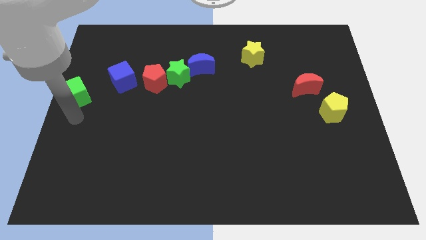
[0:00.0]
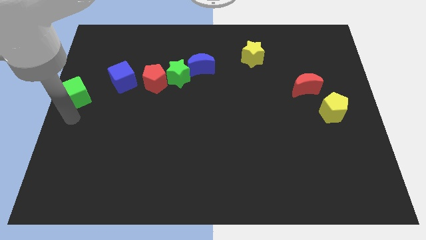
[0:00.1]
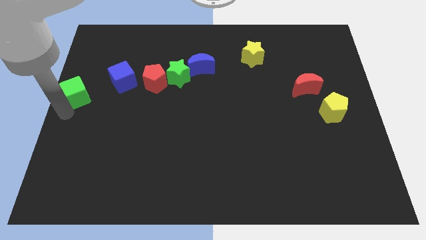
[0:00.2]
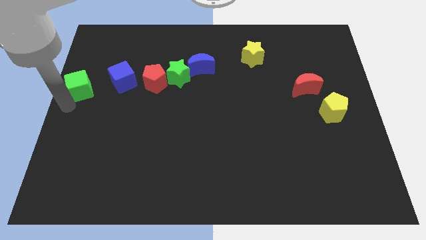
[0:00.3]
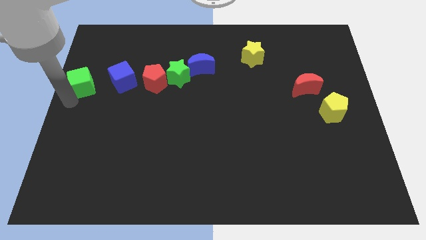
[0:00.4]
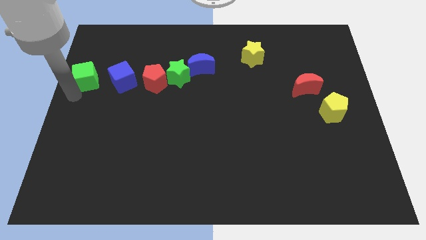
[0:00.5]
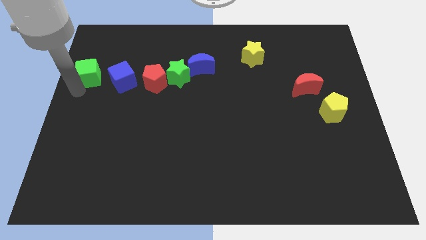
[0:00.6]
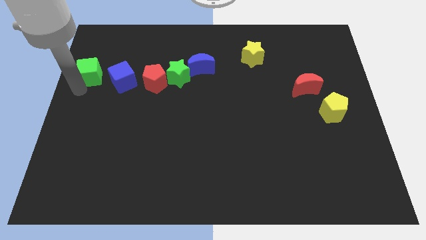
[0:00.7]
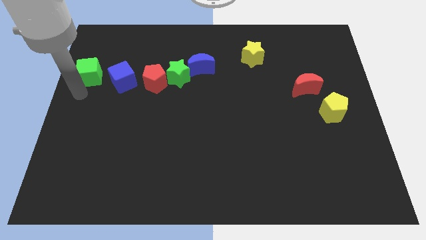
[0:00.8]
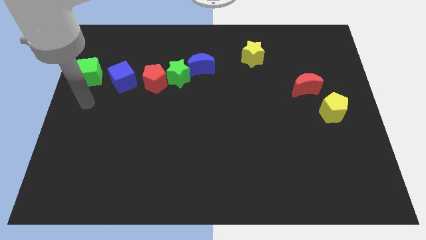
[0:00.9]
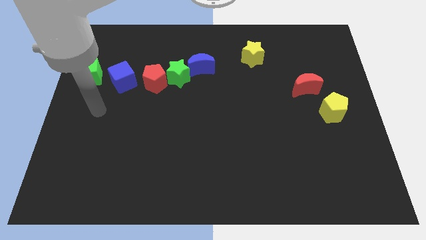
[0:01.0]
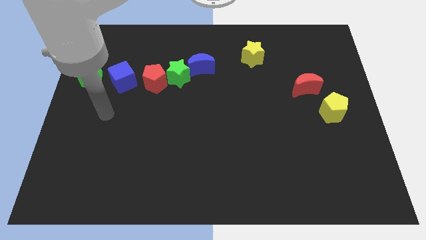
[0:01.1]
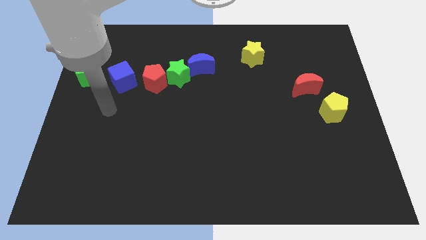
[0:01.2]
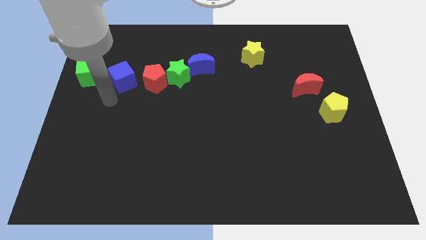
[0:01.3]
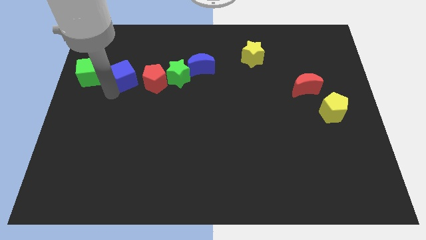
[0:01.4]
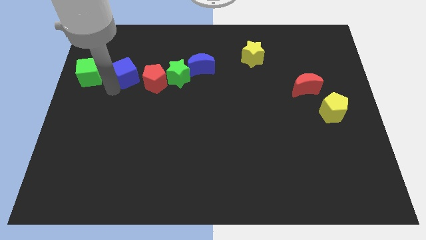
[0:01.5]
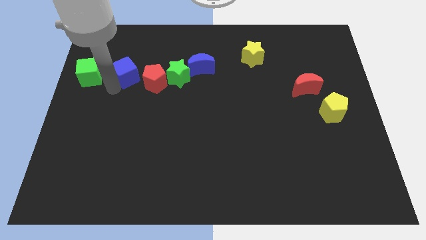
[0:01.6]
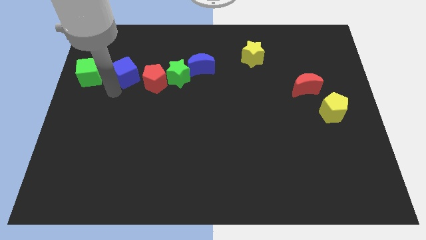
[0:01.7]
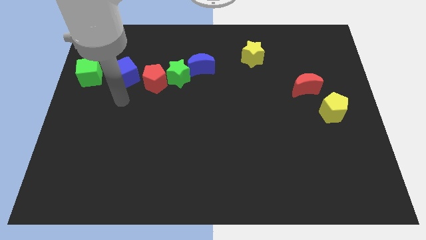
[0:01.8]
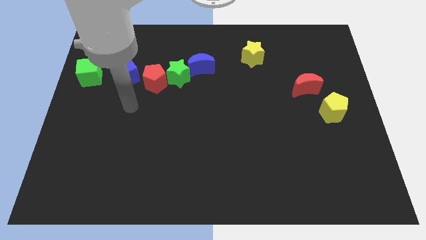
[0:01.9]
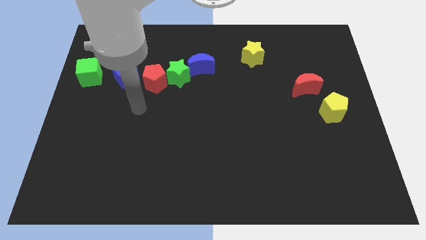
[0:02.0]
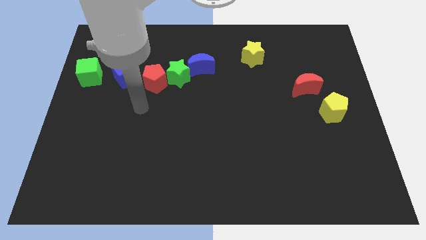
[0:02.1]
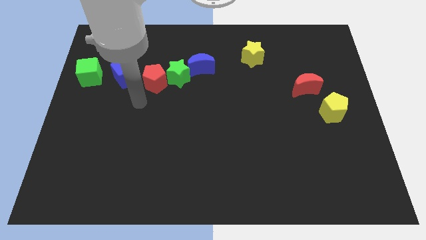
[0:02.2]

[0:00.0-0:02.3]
move the green cube slightly towards the top

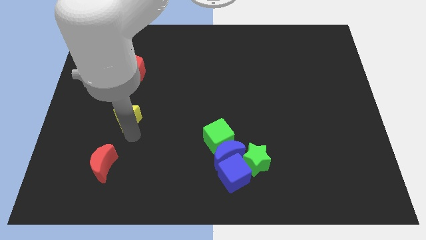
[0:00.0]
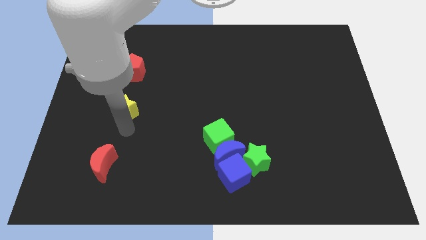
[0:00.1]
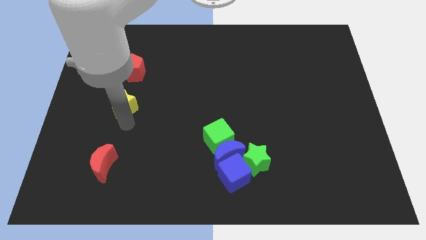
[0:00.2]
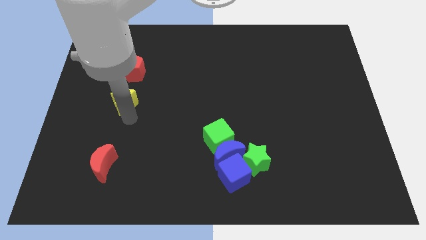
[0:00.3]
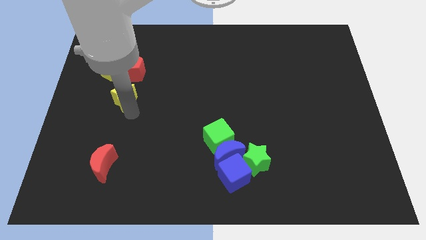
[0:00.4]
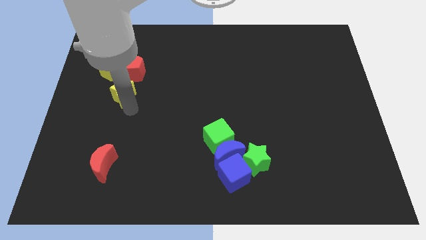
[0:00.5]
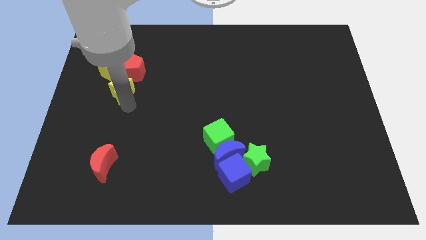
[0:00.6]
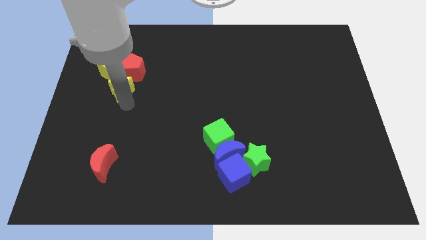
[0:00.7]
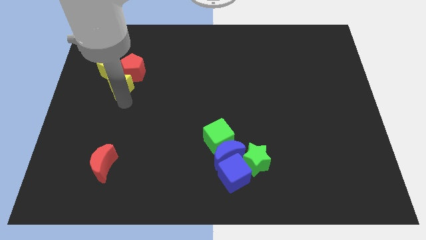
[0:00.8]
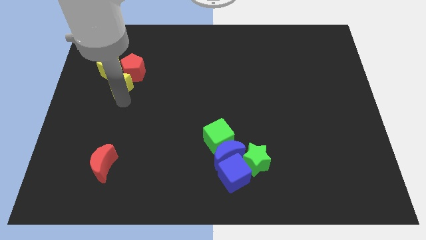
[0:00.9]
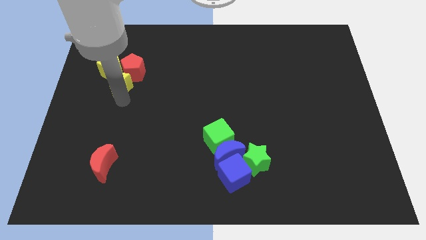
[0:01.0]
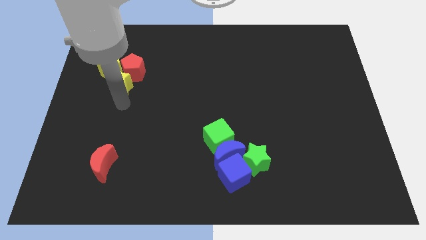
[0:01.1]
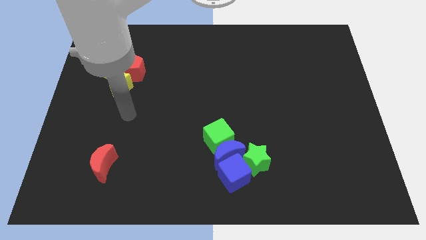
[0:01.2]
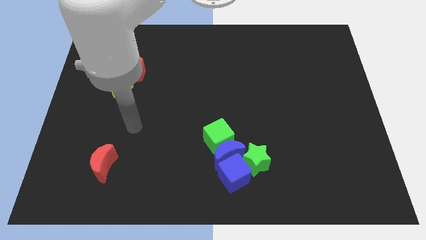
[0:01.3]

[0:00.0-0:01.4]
place the yellow star close to the red and yellow pentagon

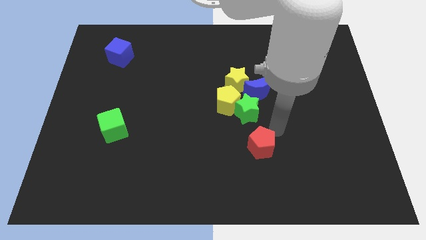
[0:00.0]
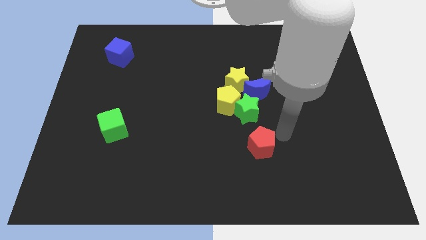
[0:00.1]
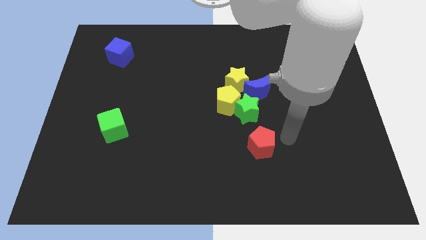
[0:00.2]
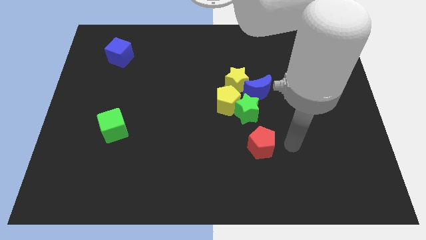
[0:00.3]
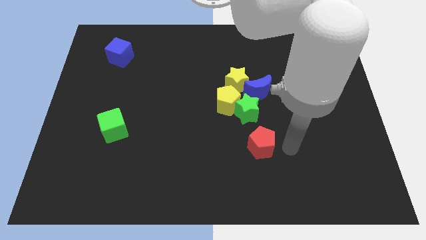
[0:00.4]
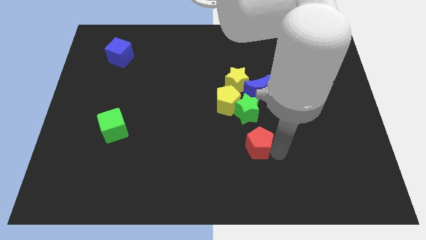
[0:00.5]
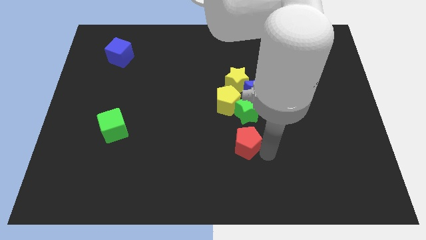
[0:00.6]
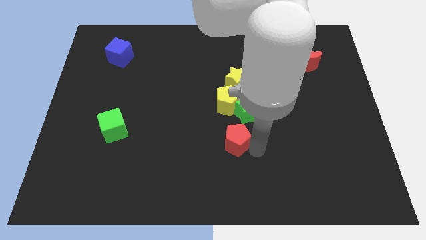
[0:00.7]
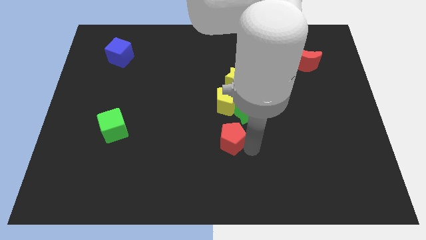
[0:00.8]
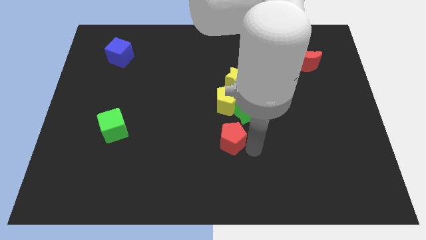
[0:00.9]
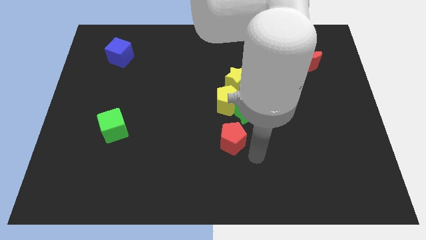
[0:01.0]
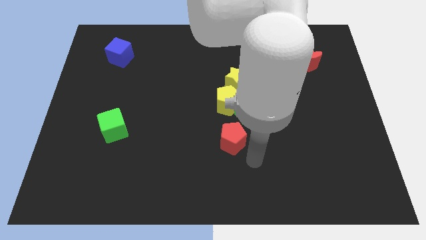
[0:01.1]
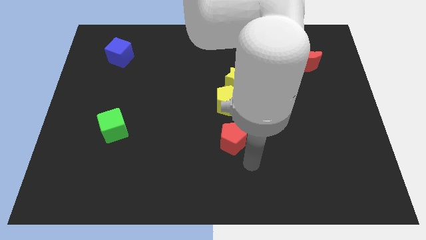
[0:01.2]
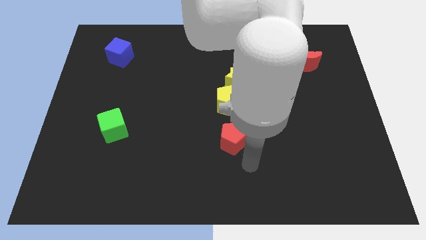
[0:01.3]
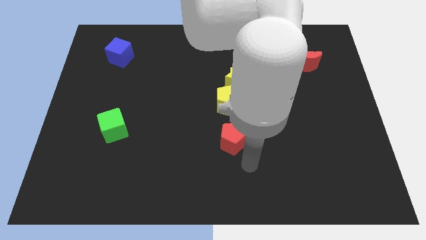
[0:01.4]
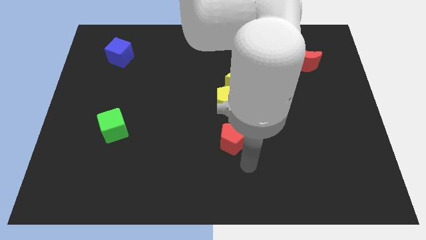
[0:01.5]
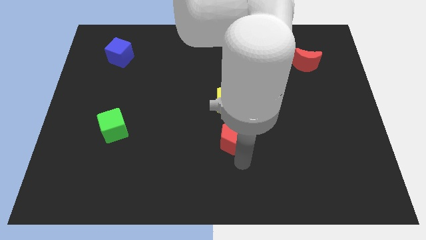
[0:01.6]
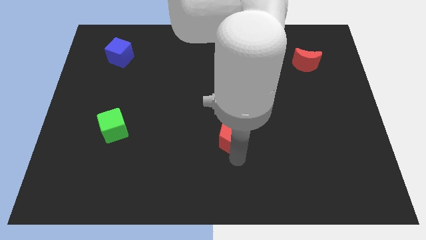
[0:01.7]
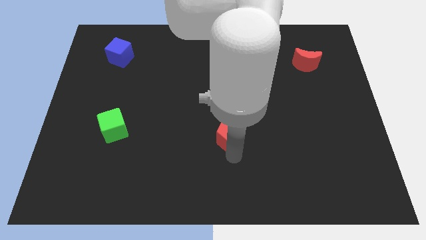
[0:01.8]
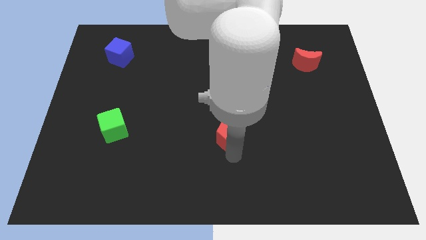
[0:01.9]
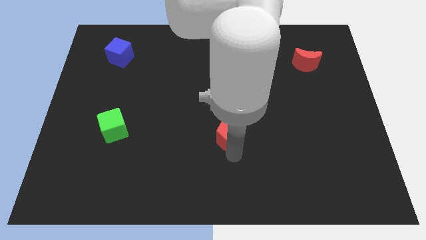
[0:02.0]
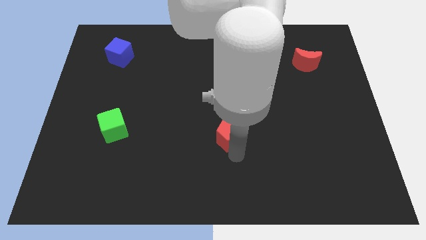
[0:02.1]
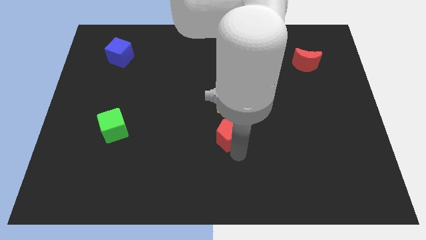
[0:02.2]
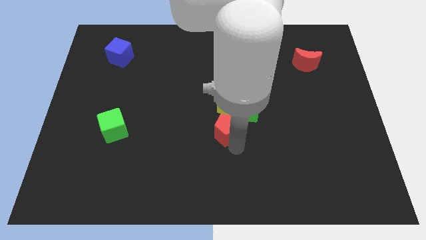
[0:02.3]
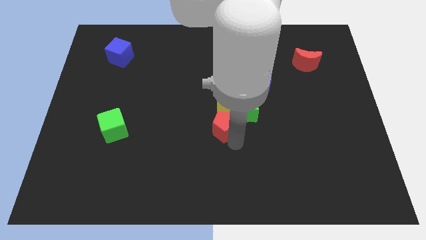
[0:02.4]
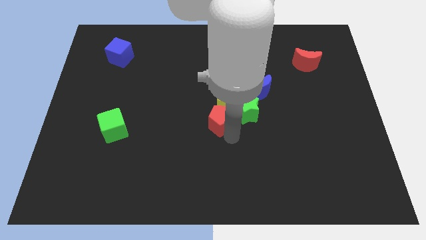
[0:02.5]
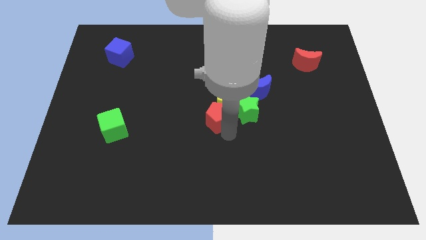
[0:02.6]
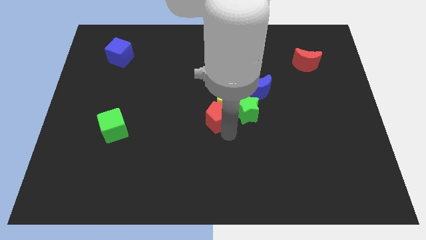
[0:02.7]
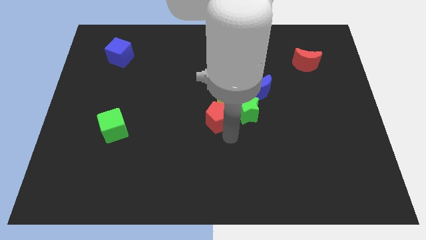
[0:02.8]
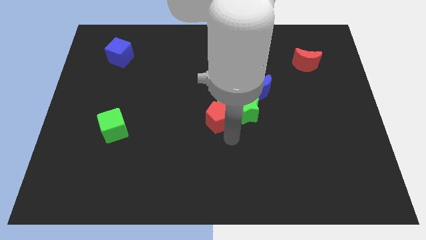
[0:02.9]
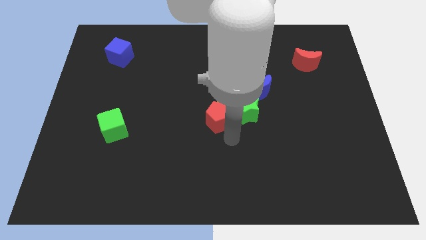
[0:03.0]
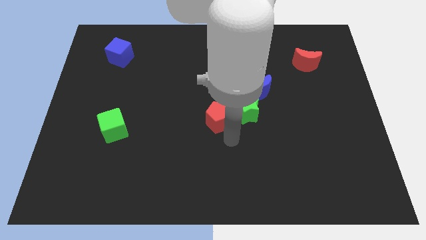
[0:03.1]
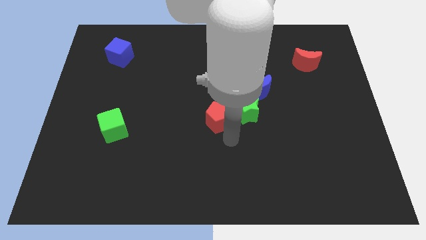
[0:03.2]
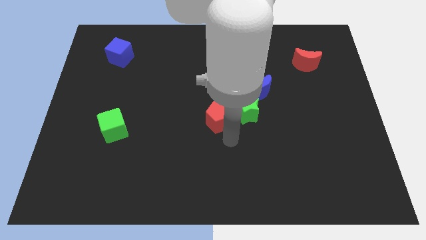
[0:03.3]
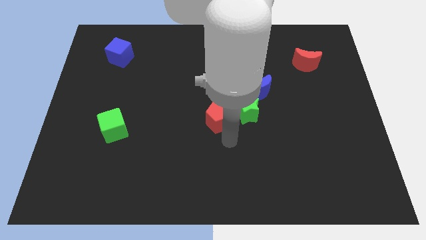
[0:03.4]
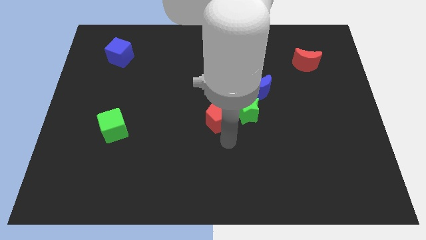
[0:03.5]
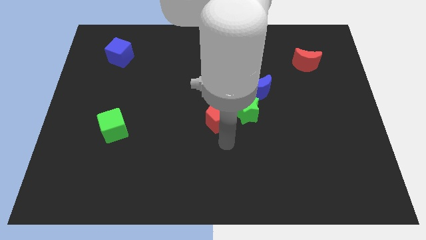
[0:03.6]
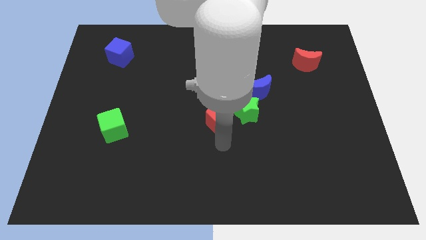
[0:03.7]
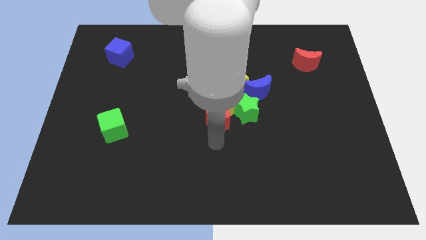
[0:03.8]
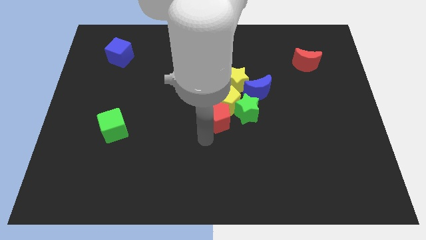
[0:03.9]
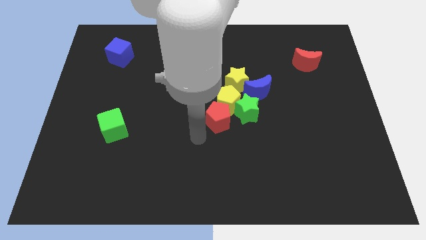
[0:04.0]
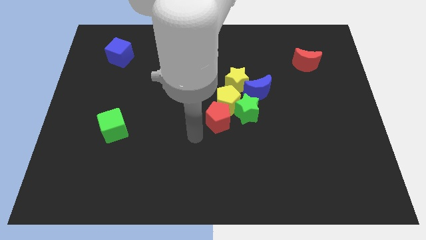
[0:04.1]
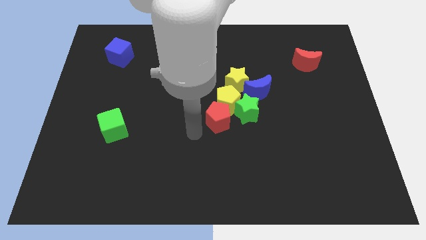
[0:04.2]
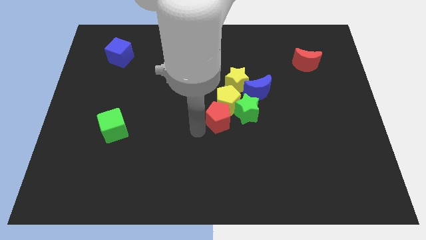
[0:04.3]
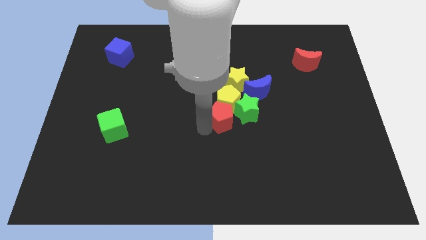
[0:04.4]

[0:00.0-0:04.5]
push the red pentagon into yellow pentagon

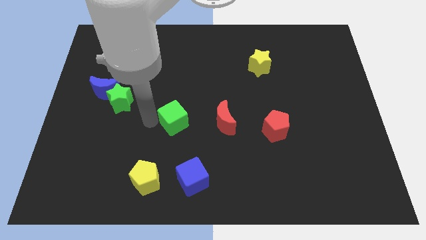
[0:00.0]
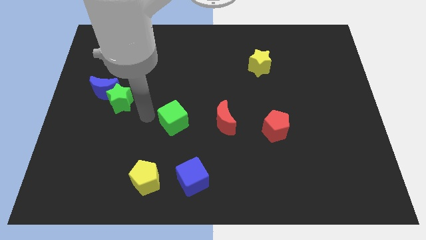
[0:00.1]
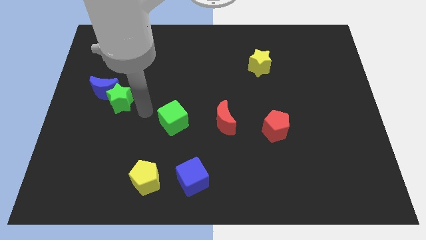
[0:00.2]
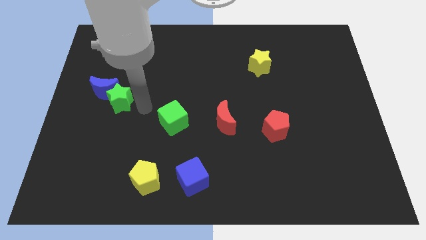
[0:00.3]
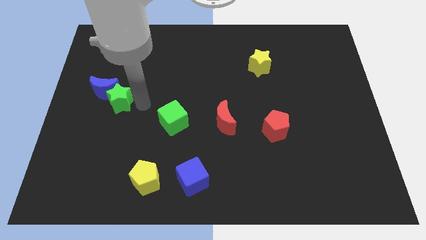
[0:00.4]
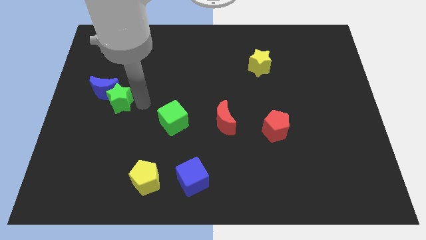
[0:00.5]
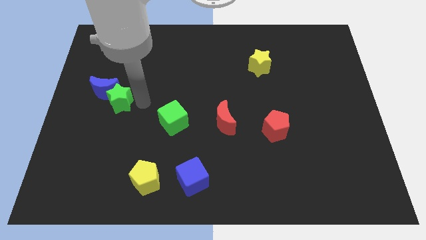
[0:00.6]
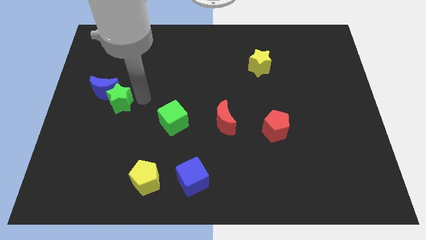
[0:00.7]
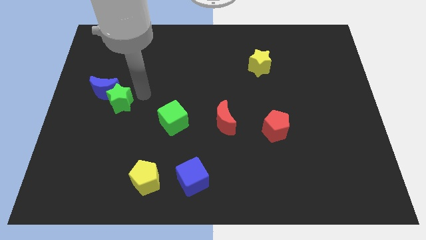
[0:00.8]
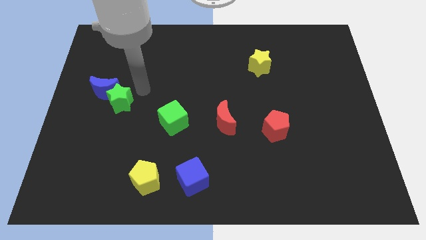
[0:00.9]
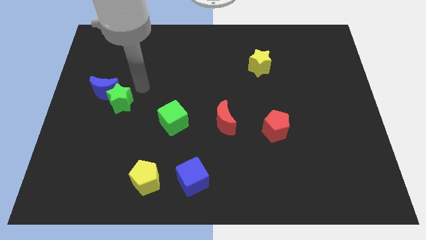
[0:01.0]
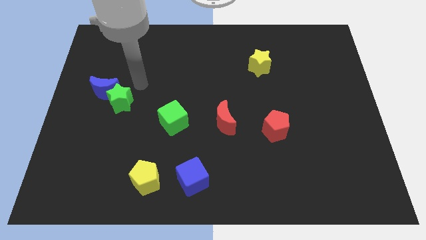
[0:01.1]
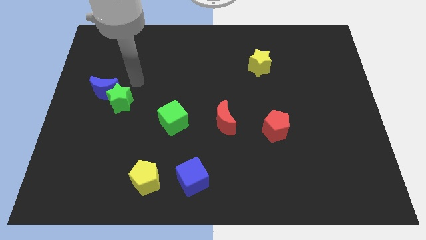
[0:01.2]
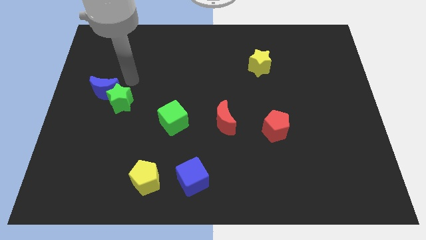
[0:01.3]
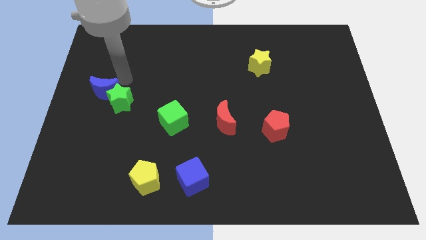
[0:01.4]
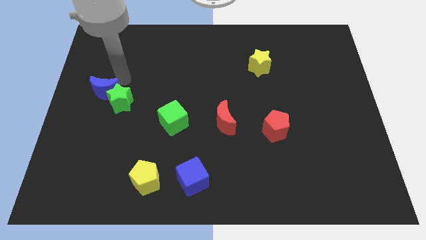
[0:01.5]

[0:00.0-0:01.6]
point your arm at the top of the green star
